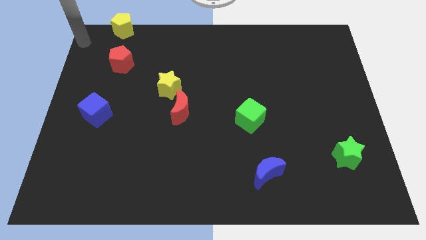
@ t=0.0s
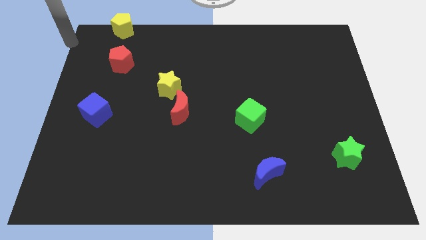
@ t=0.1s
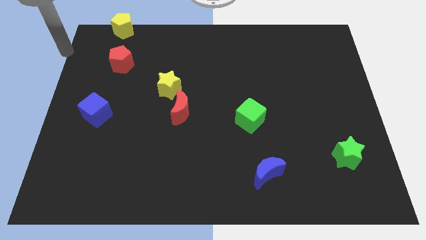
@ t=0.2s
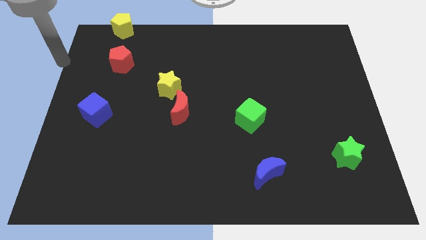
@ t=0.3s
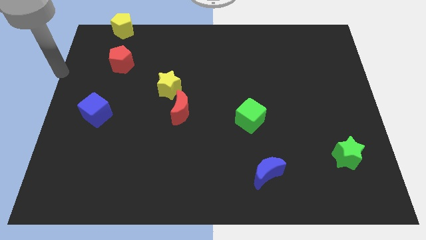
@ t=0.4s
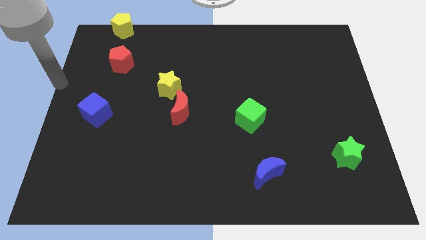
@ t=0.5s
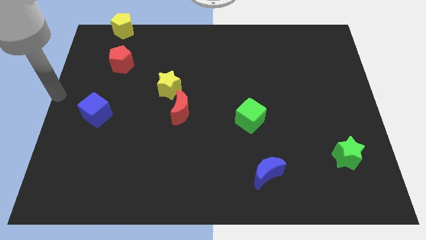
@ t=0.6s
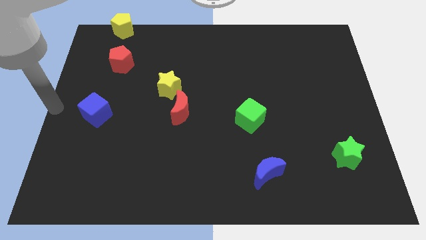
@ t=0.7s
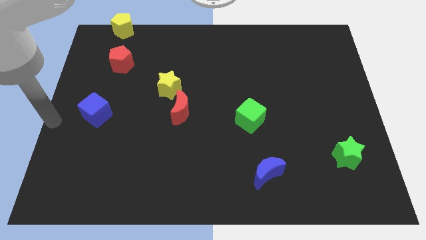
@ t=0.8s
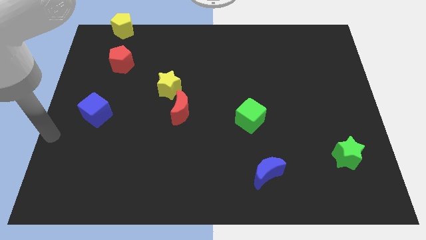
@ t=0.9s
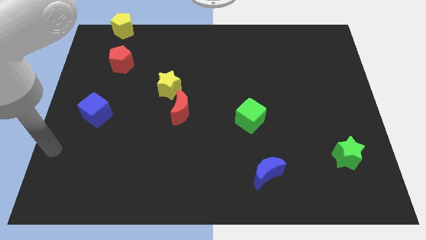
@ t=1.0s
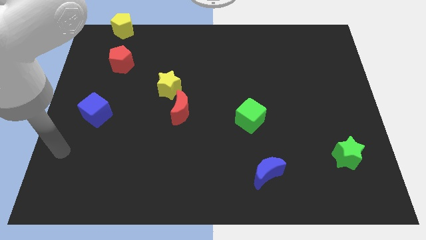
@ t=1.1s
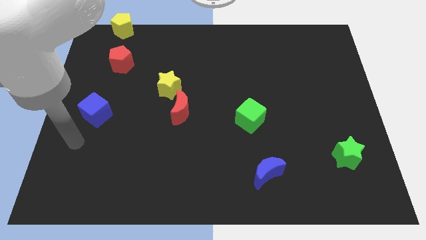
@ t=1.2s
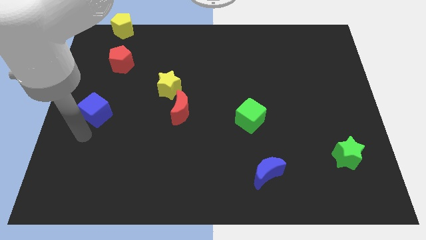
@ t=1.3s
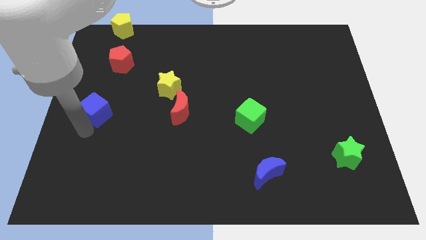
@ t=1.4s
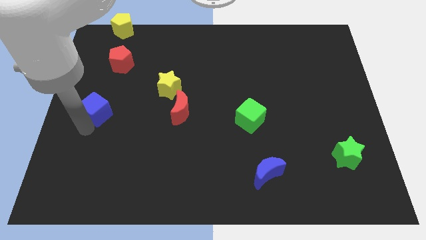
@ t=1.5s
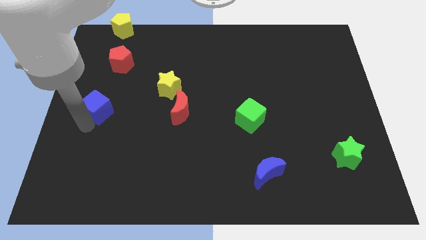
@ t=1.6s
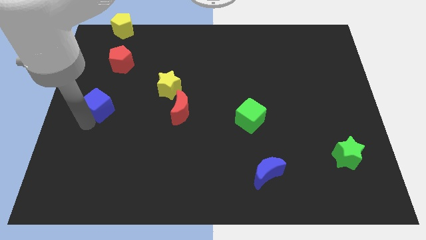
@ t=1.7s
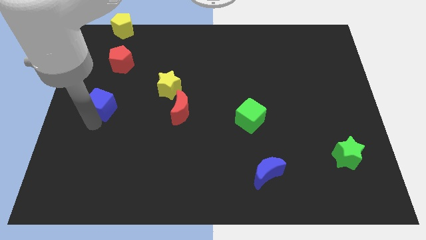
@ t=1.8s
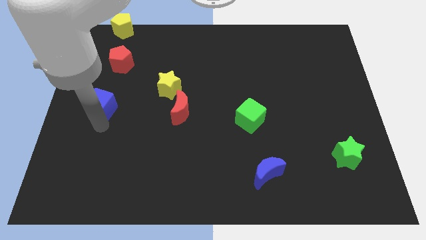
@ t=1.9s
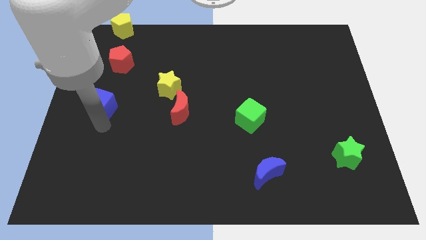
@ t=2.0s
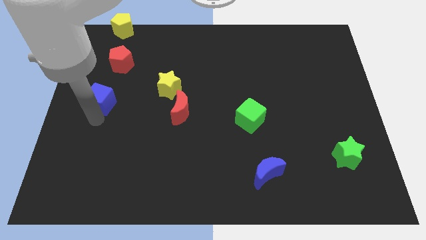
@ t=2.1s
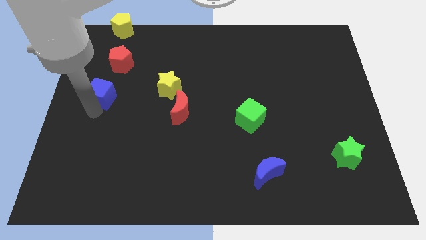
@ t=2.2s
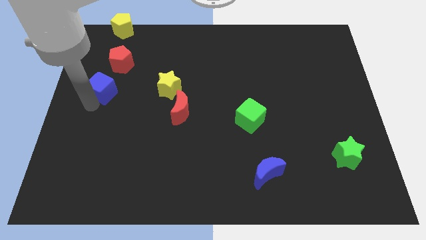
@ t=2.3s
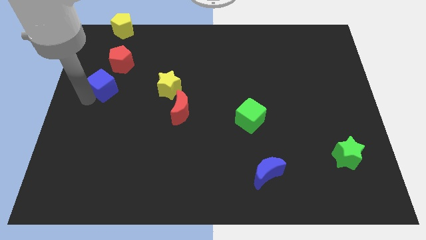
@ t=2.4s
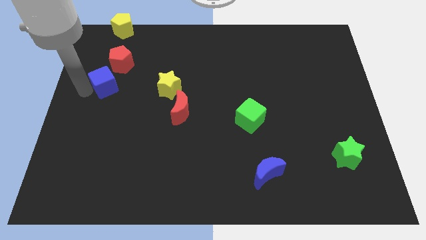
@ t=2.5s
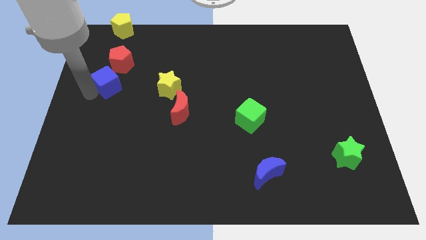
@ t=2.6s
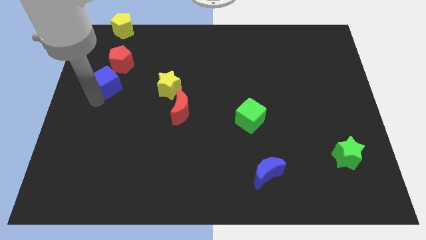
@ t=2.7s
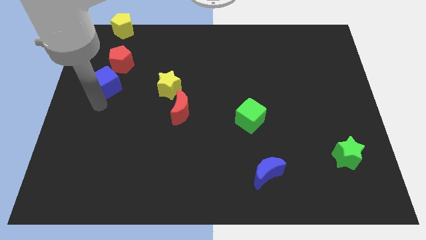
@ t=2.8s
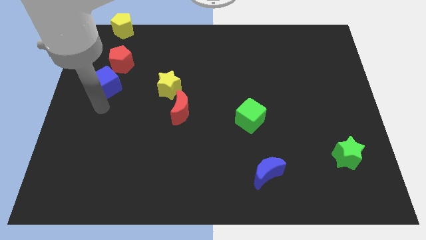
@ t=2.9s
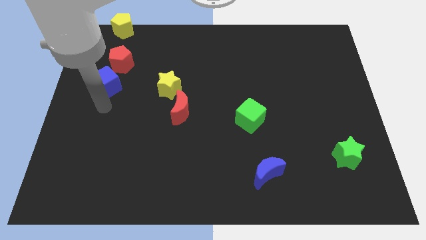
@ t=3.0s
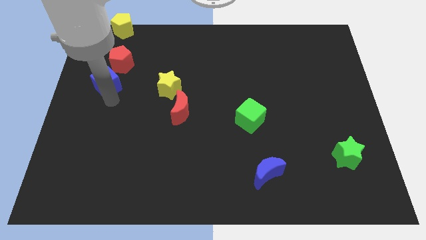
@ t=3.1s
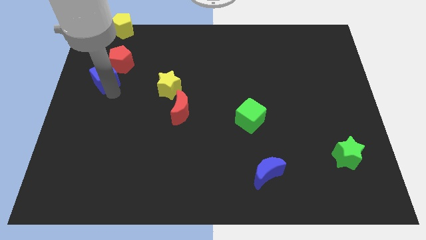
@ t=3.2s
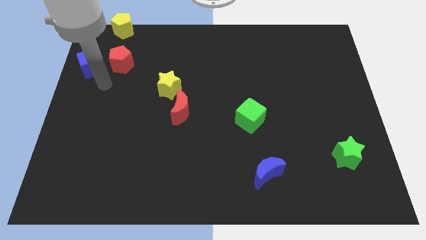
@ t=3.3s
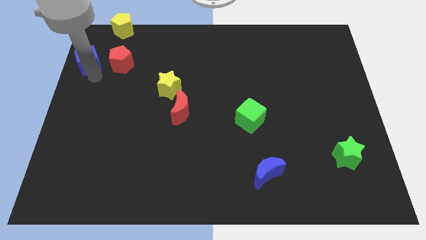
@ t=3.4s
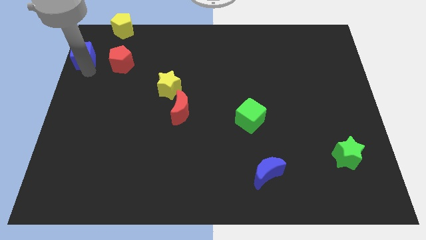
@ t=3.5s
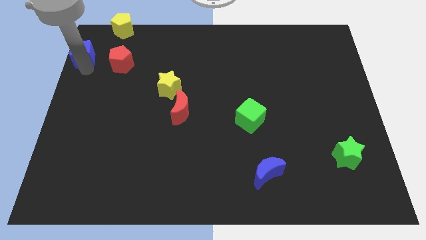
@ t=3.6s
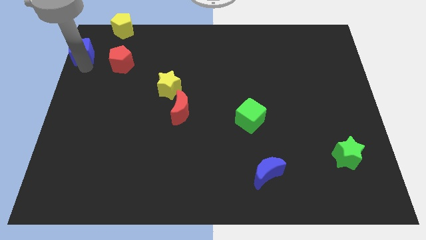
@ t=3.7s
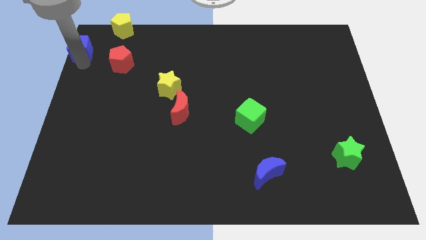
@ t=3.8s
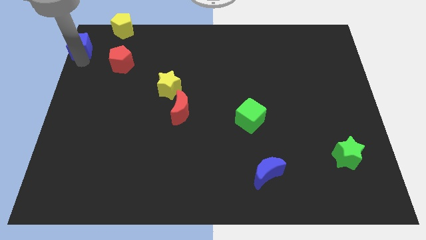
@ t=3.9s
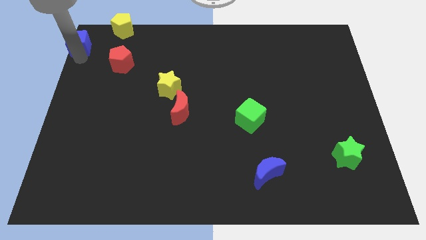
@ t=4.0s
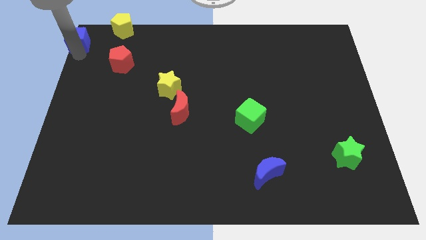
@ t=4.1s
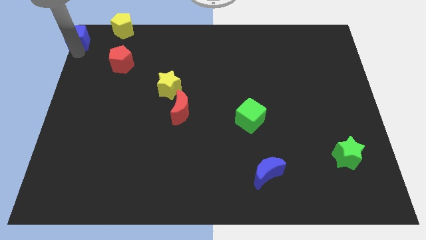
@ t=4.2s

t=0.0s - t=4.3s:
move blue cube towards the top left corner of the board

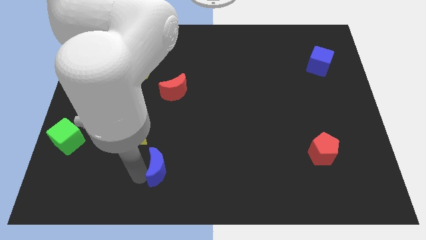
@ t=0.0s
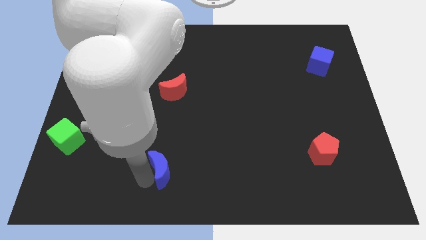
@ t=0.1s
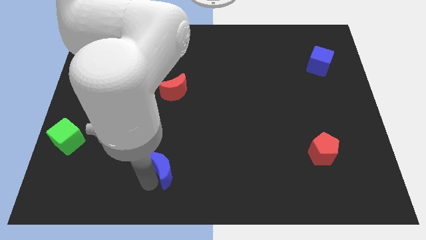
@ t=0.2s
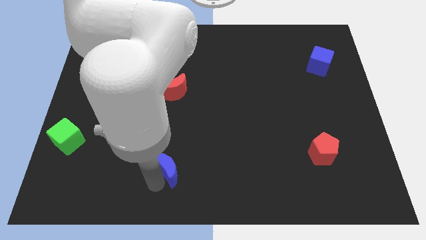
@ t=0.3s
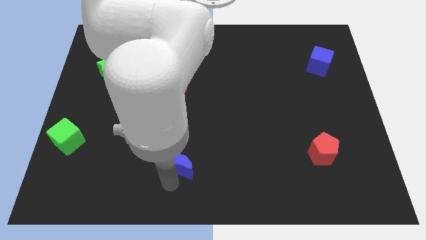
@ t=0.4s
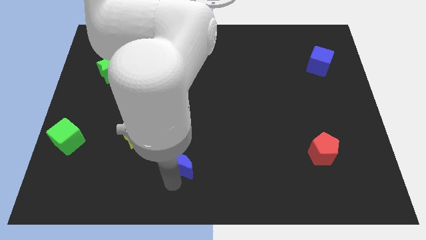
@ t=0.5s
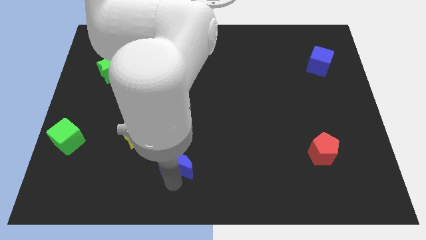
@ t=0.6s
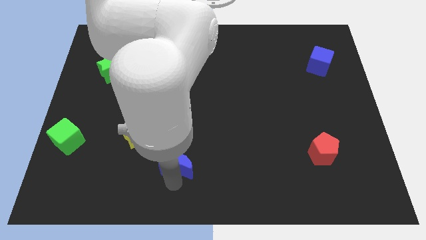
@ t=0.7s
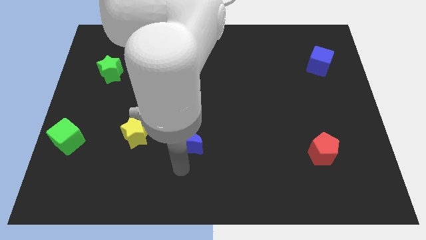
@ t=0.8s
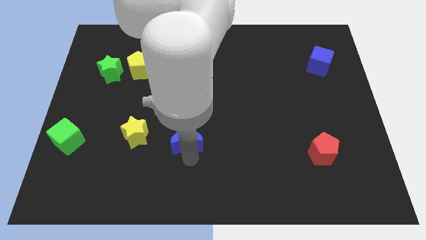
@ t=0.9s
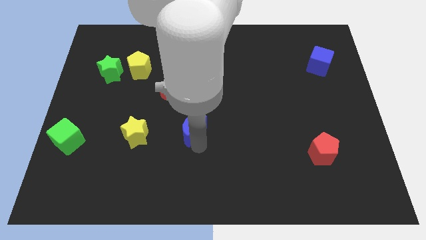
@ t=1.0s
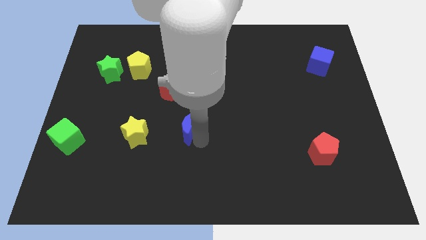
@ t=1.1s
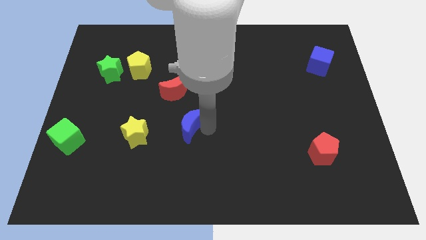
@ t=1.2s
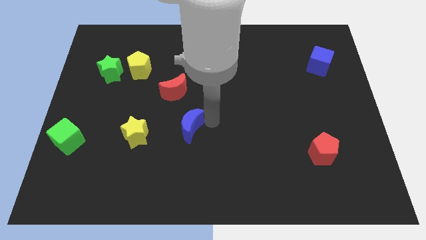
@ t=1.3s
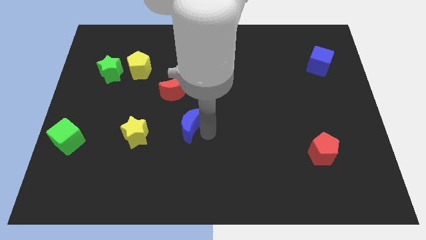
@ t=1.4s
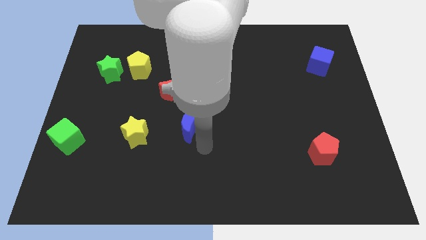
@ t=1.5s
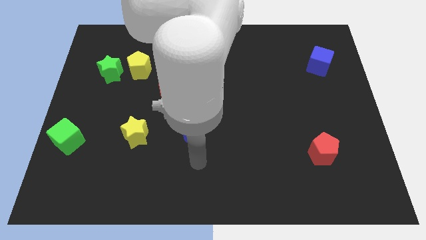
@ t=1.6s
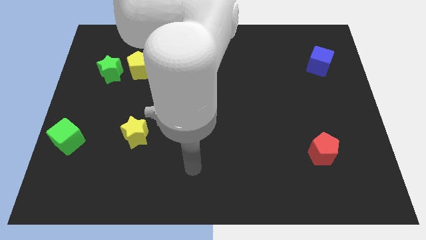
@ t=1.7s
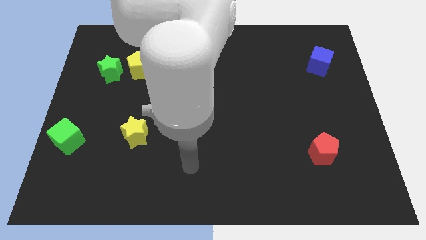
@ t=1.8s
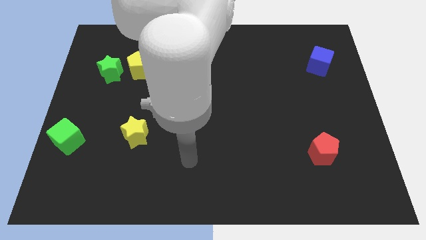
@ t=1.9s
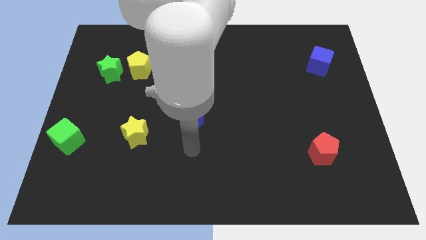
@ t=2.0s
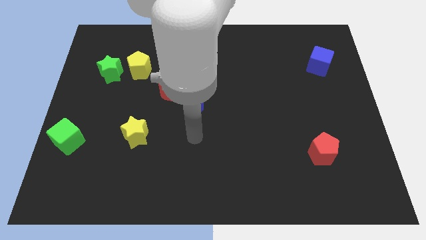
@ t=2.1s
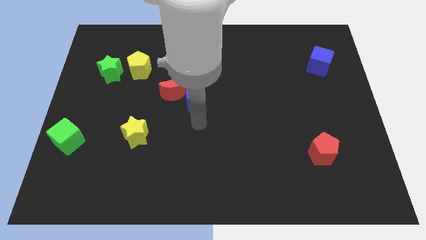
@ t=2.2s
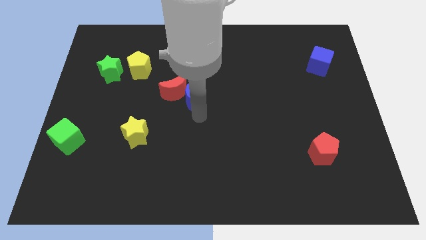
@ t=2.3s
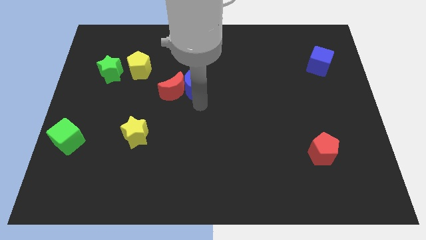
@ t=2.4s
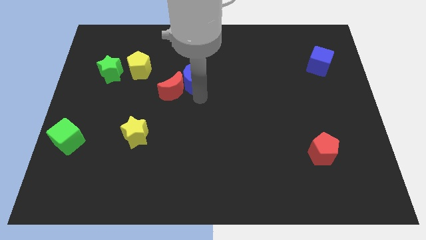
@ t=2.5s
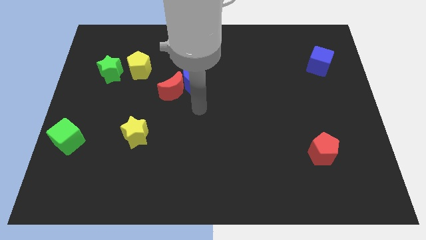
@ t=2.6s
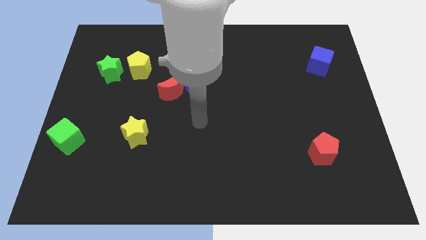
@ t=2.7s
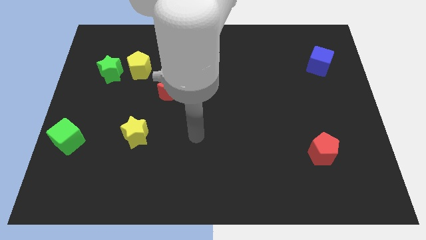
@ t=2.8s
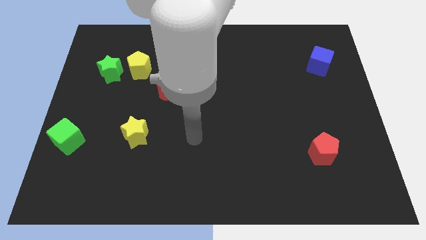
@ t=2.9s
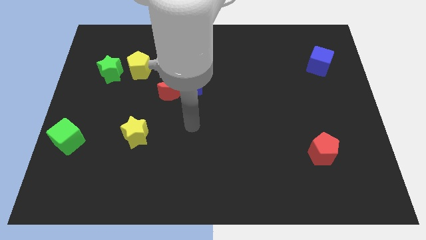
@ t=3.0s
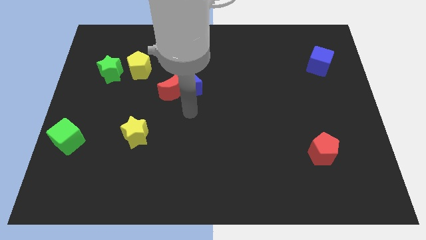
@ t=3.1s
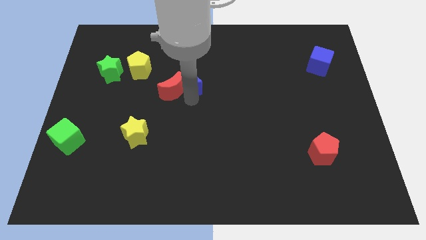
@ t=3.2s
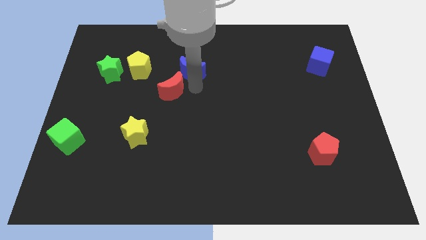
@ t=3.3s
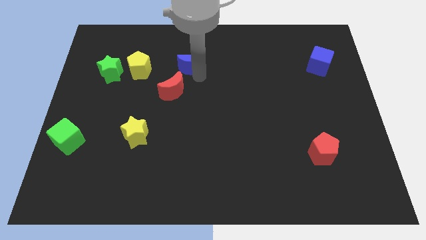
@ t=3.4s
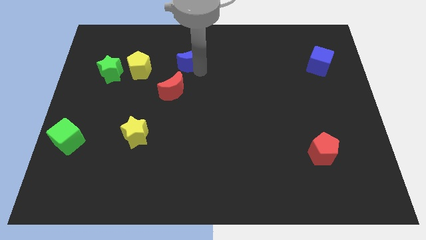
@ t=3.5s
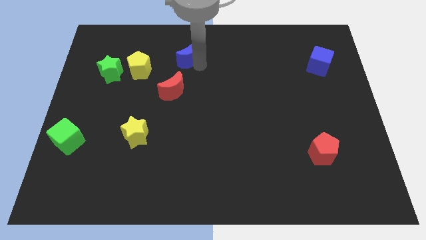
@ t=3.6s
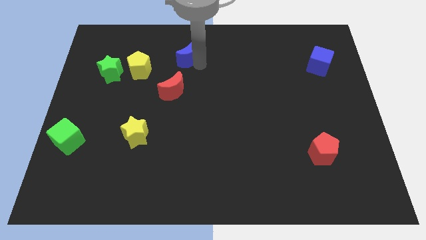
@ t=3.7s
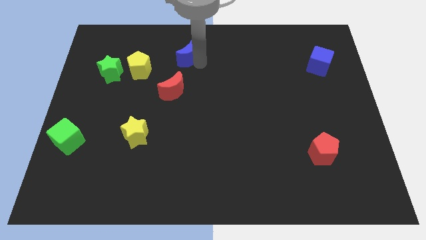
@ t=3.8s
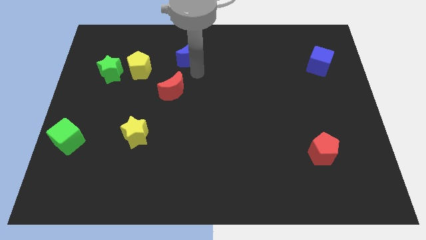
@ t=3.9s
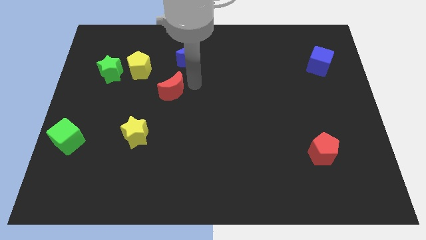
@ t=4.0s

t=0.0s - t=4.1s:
place blue moon to the right of yellow pentagon

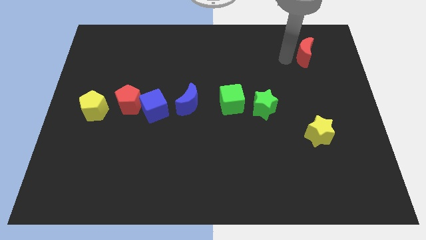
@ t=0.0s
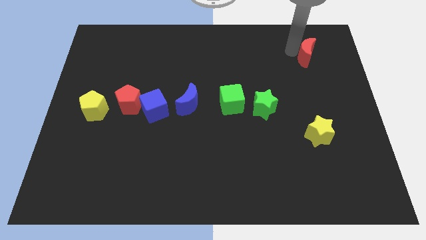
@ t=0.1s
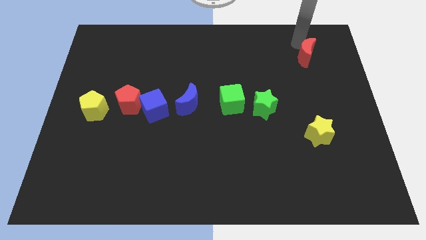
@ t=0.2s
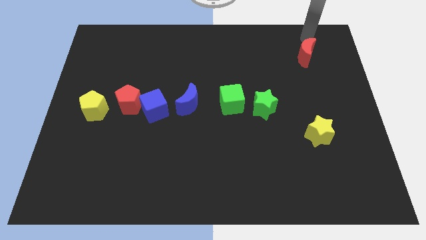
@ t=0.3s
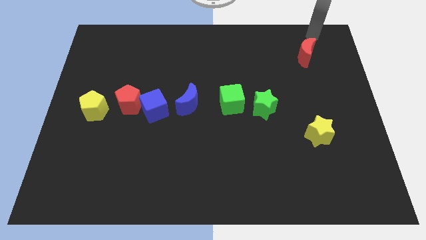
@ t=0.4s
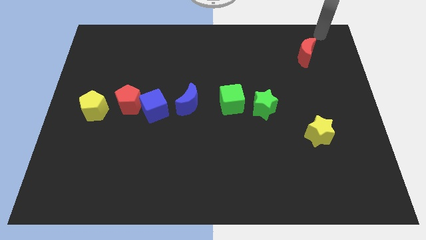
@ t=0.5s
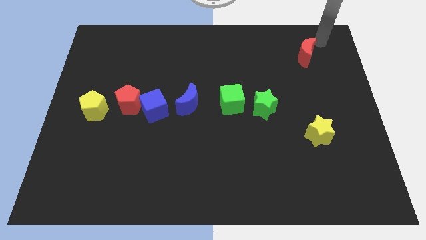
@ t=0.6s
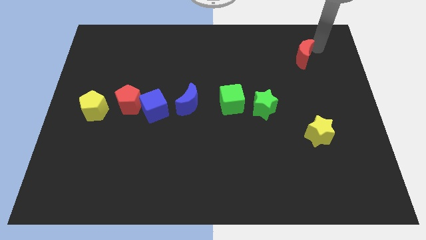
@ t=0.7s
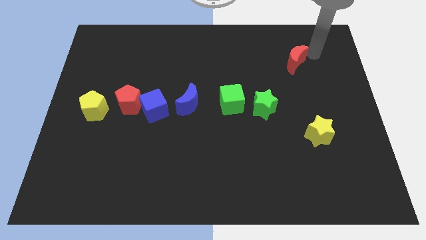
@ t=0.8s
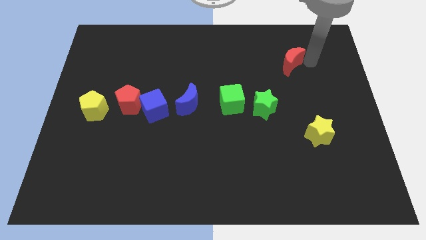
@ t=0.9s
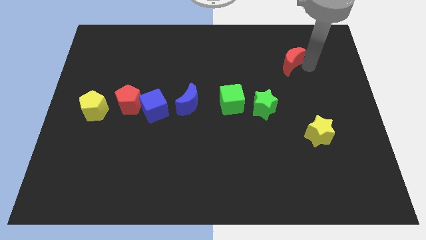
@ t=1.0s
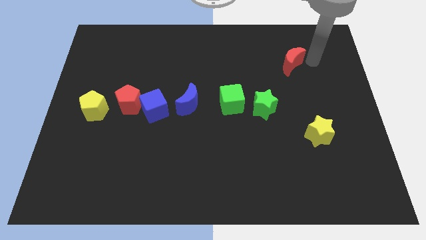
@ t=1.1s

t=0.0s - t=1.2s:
move the red moon diagonal to the green star
